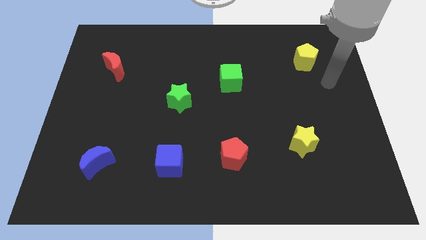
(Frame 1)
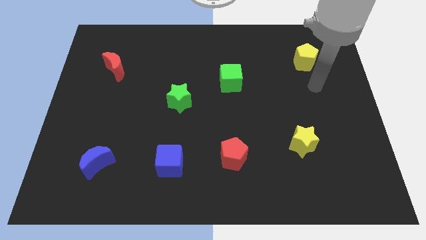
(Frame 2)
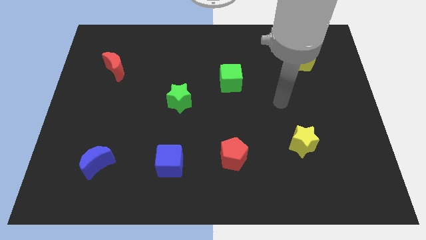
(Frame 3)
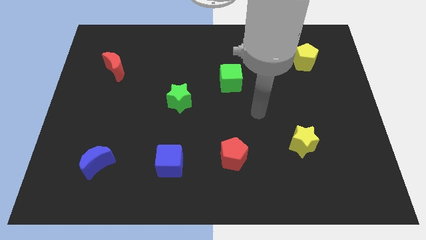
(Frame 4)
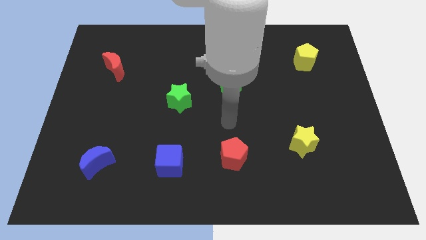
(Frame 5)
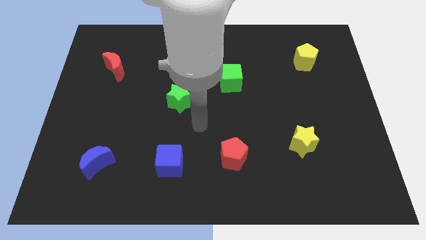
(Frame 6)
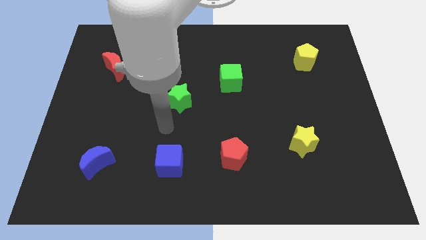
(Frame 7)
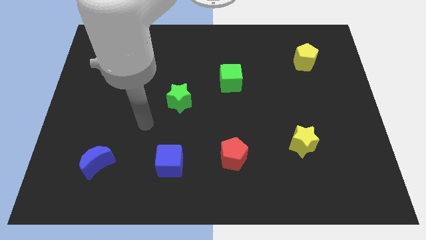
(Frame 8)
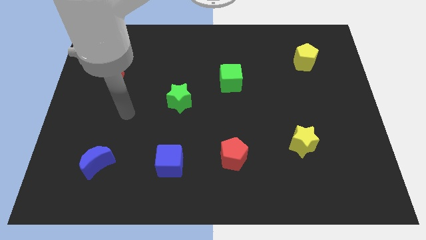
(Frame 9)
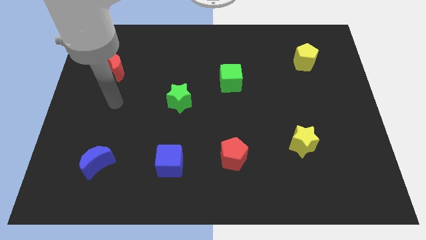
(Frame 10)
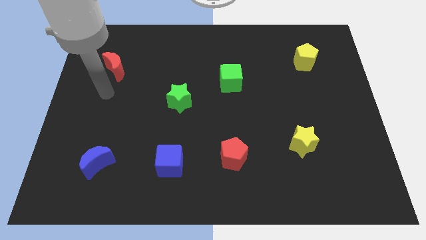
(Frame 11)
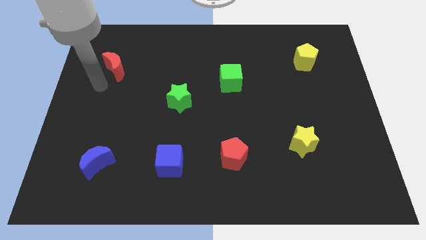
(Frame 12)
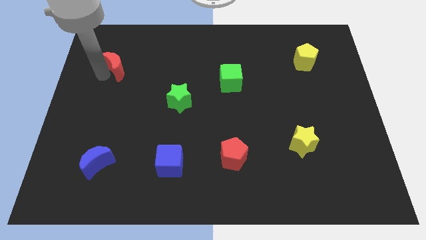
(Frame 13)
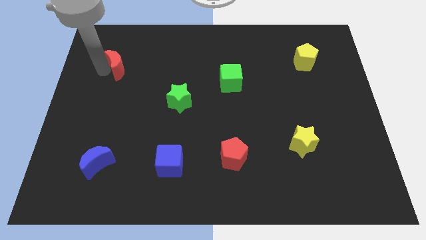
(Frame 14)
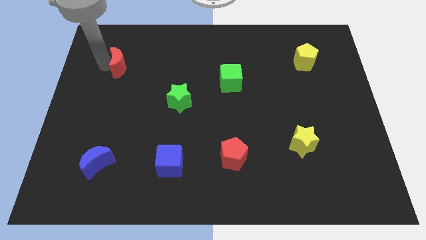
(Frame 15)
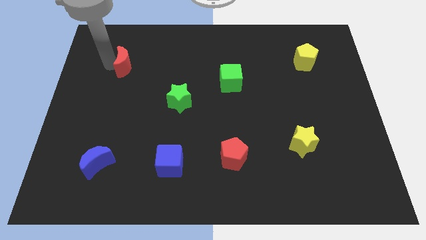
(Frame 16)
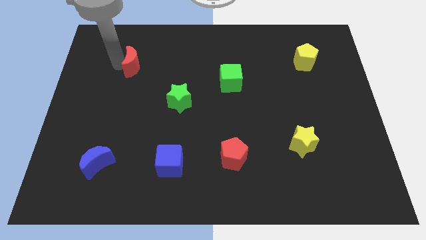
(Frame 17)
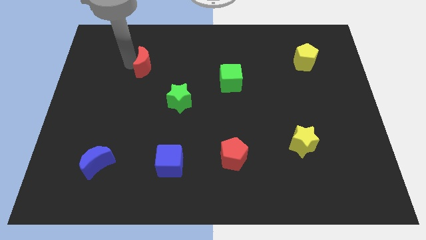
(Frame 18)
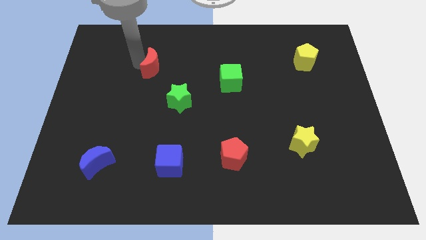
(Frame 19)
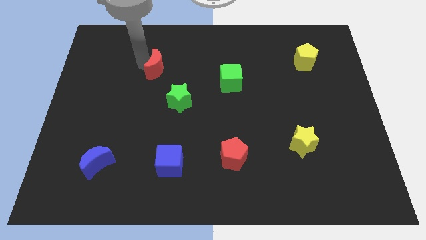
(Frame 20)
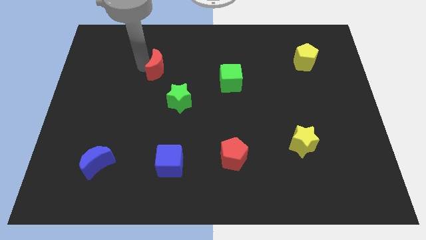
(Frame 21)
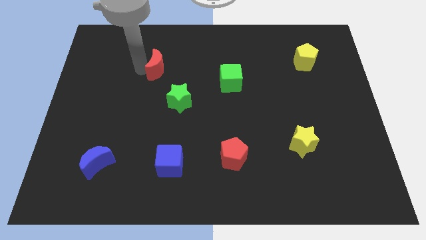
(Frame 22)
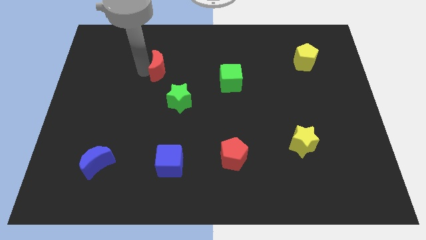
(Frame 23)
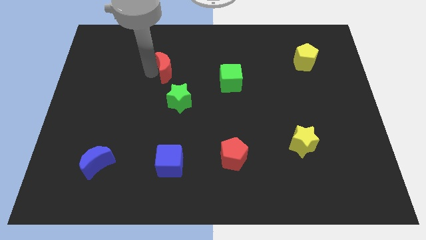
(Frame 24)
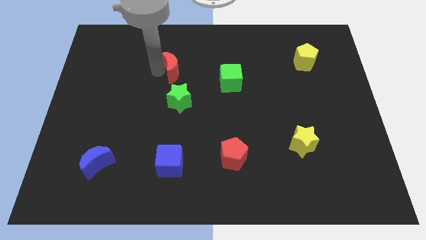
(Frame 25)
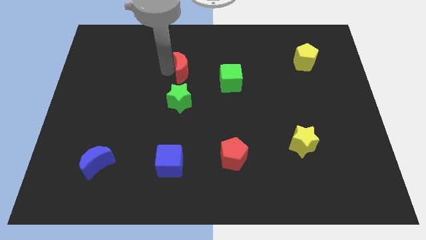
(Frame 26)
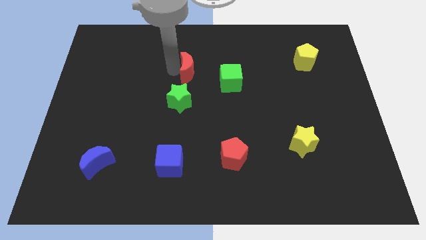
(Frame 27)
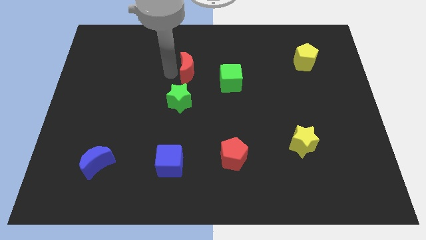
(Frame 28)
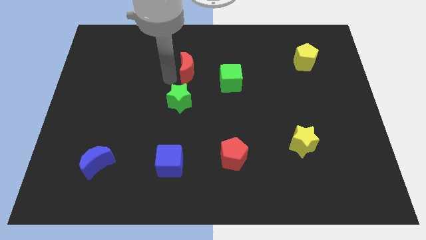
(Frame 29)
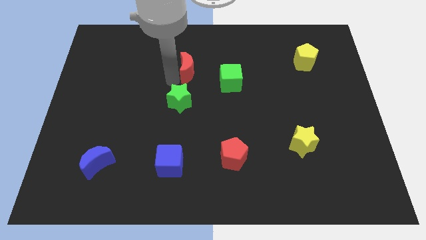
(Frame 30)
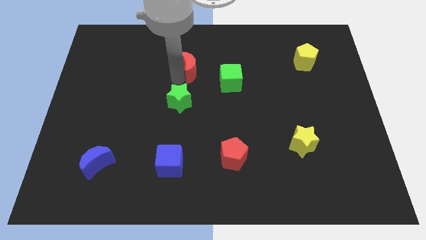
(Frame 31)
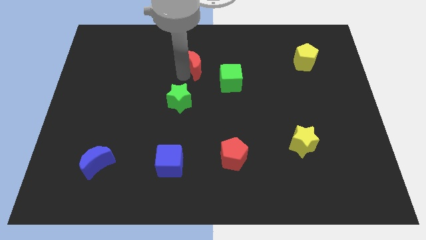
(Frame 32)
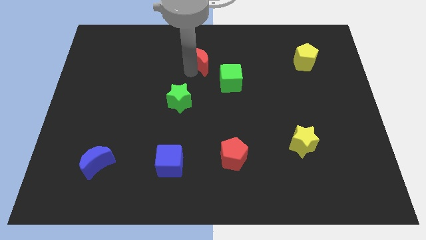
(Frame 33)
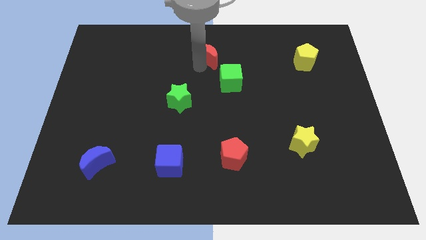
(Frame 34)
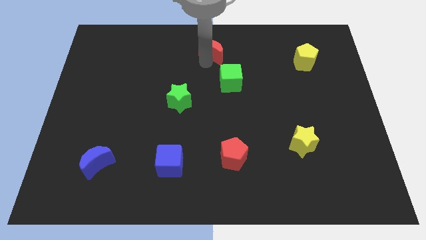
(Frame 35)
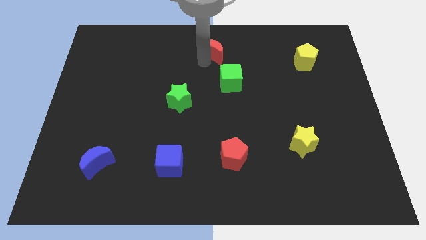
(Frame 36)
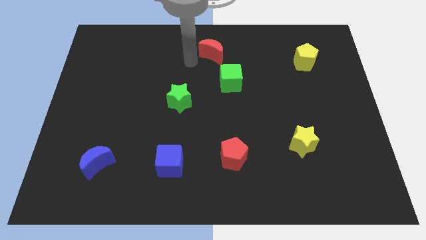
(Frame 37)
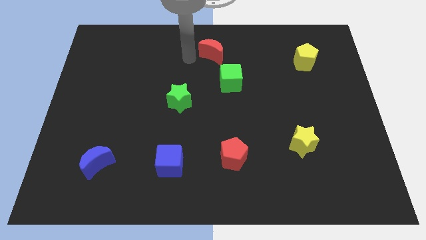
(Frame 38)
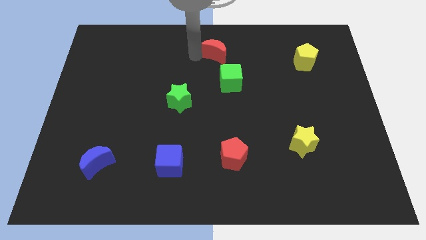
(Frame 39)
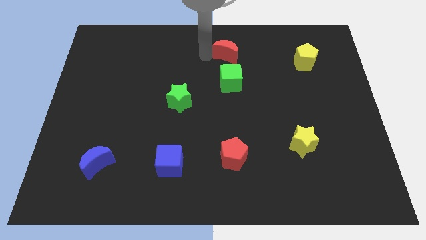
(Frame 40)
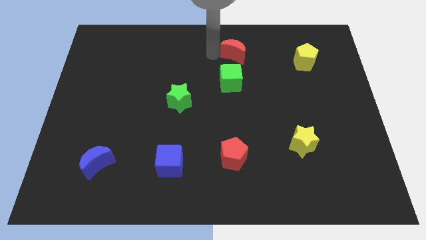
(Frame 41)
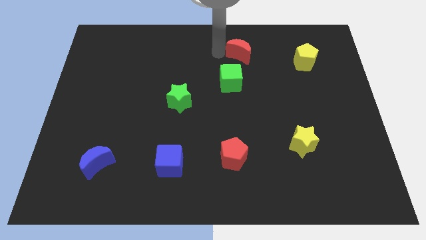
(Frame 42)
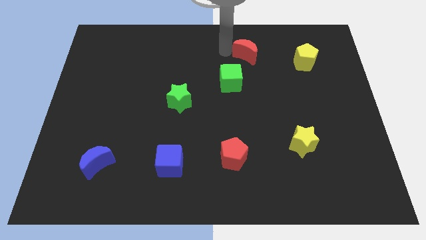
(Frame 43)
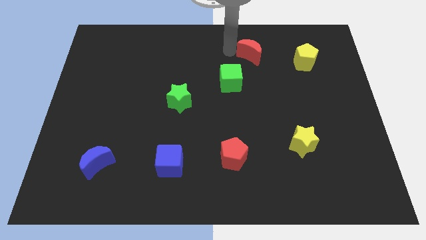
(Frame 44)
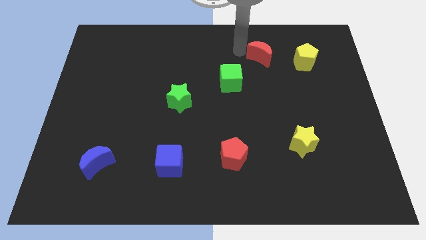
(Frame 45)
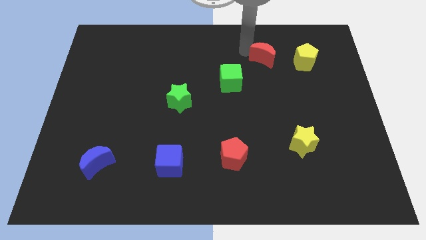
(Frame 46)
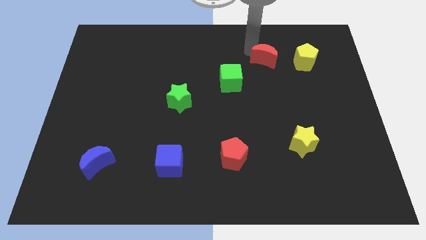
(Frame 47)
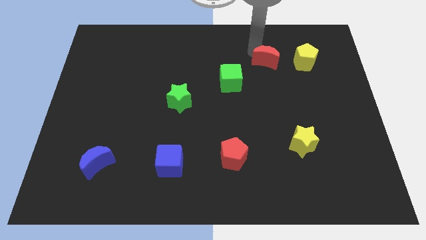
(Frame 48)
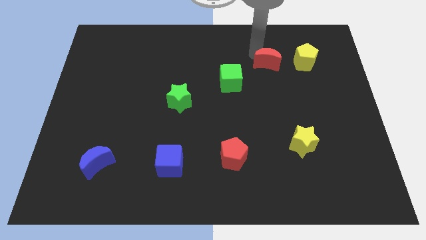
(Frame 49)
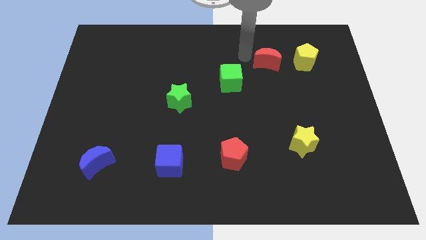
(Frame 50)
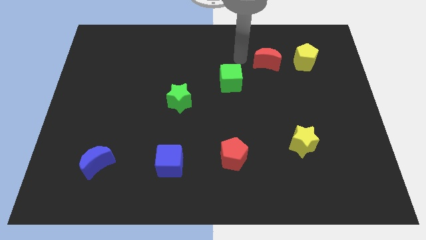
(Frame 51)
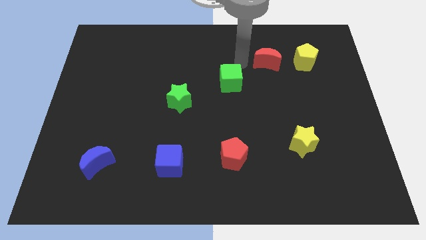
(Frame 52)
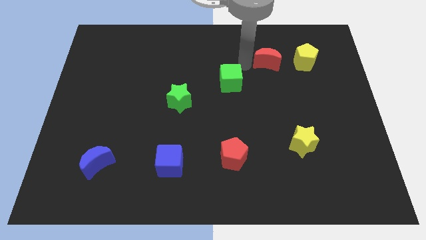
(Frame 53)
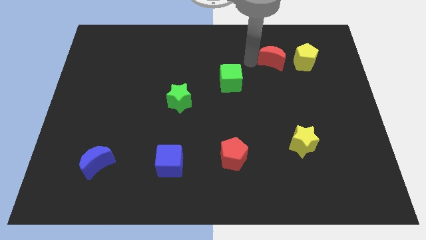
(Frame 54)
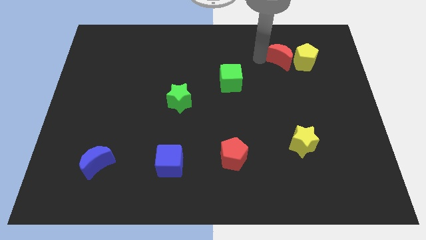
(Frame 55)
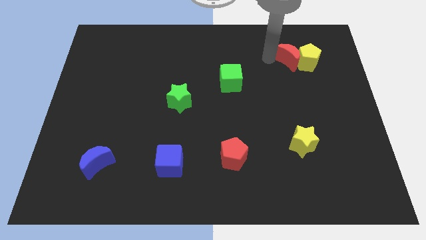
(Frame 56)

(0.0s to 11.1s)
push the red moon close to the yellow pentagon

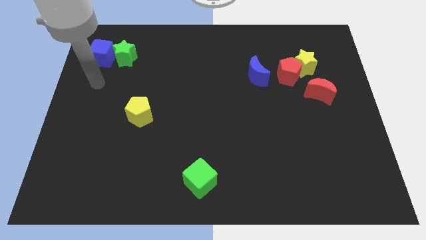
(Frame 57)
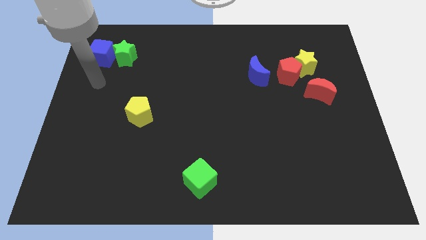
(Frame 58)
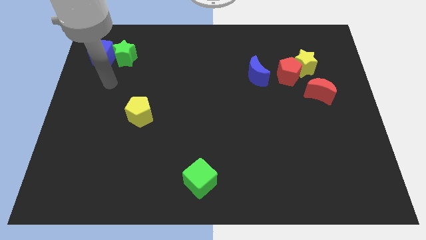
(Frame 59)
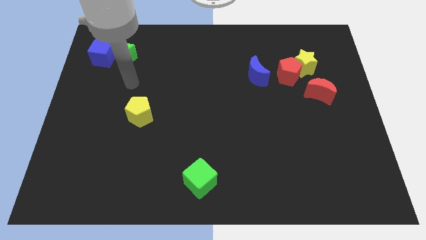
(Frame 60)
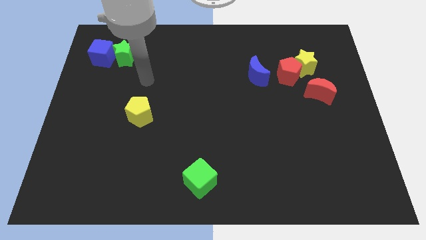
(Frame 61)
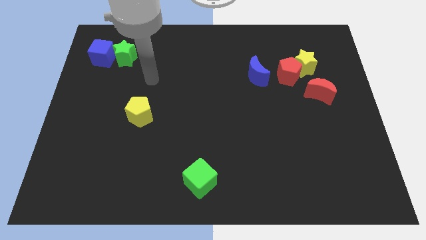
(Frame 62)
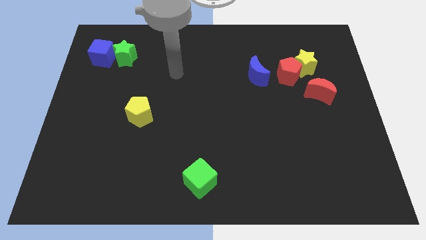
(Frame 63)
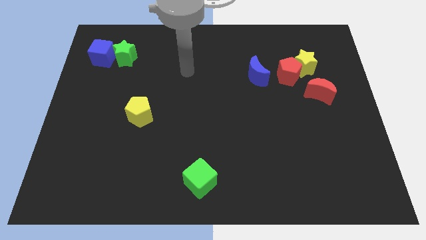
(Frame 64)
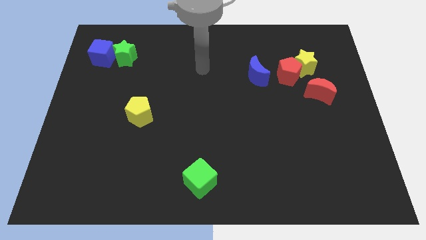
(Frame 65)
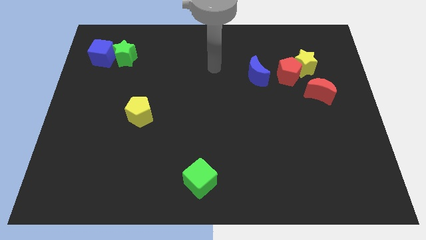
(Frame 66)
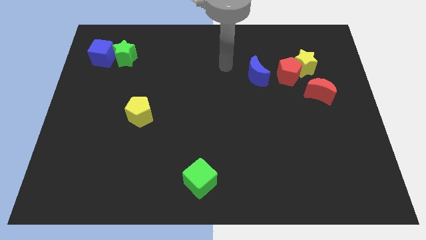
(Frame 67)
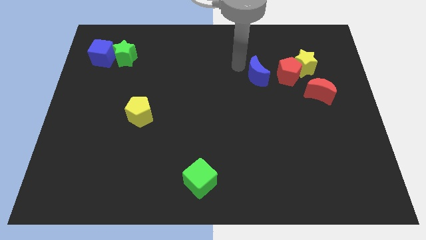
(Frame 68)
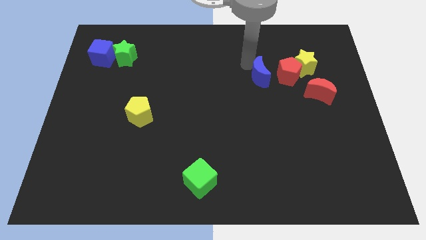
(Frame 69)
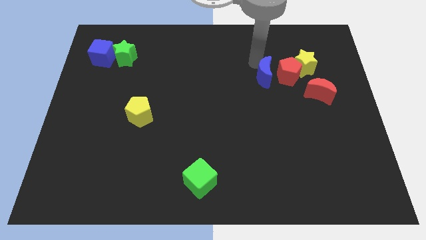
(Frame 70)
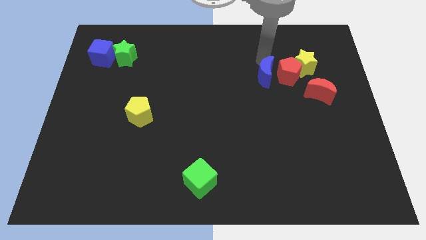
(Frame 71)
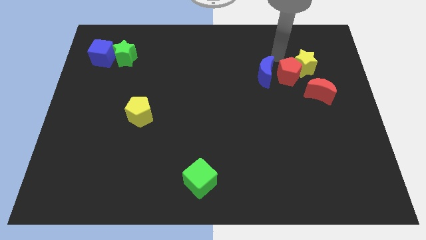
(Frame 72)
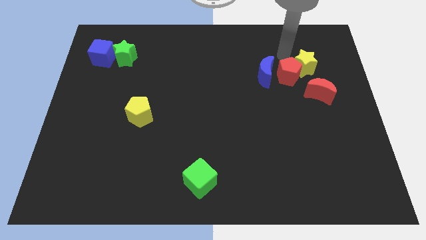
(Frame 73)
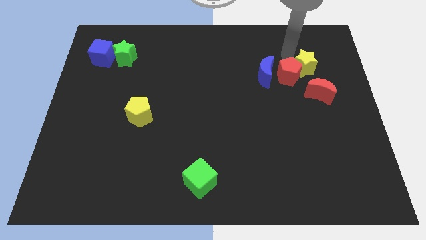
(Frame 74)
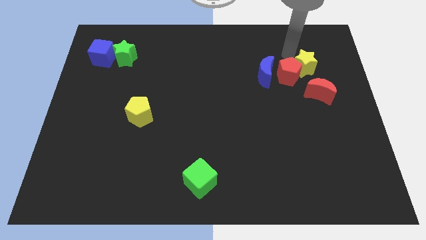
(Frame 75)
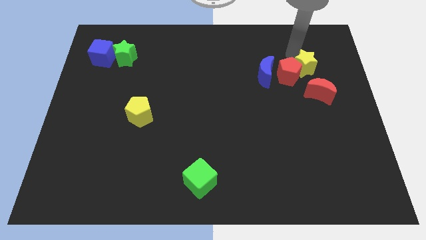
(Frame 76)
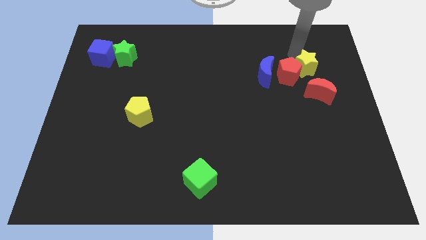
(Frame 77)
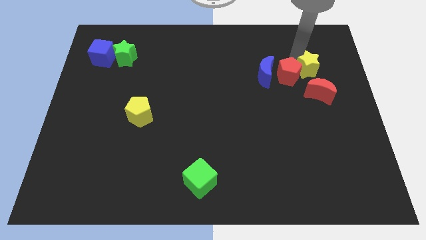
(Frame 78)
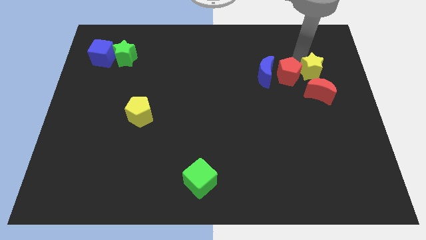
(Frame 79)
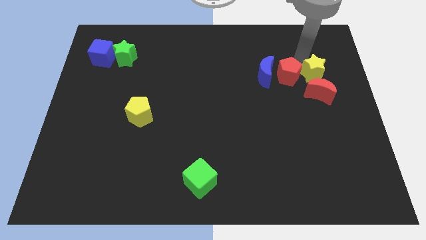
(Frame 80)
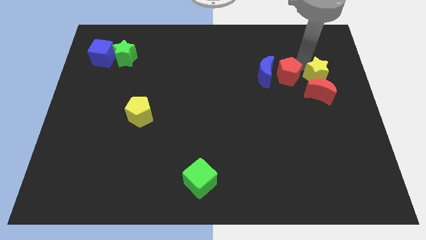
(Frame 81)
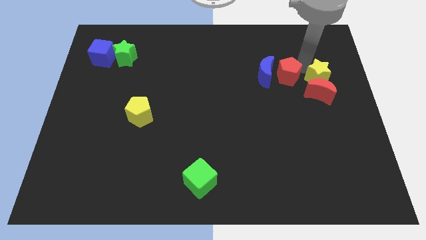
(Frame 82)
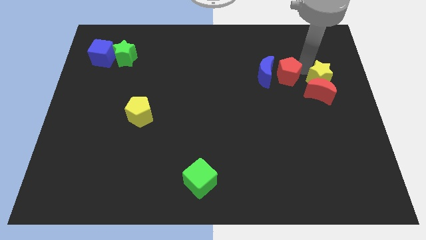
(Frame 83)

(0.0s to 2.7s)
move the yellow star towards the red moon

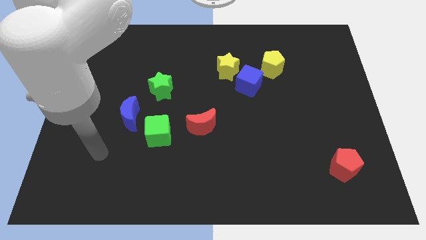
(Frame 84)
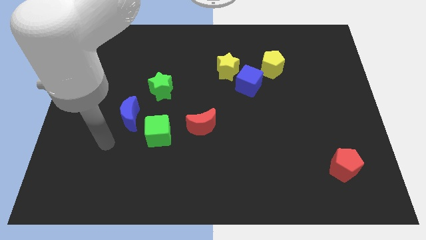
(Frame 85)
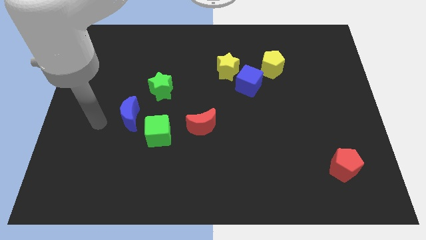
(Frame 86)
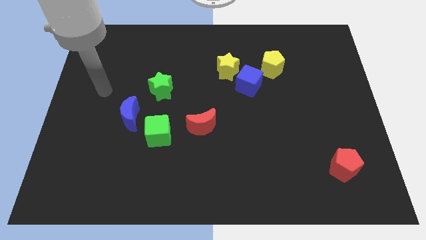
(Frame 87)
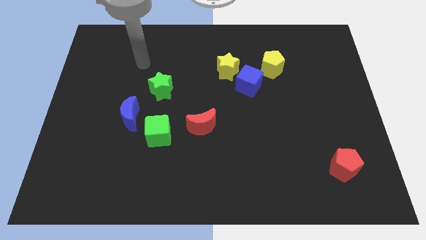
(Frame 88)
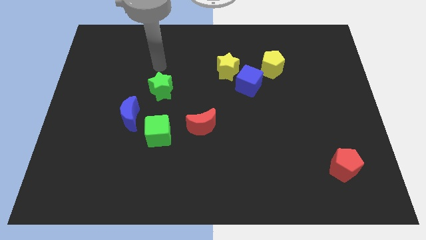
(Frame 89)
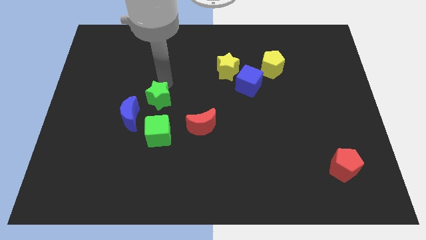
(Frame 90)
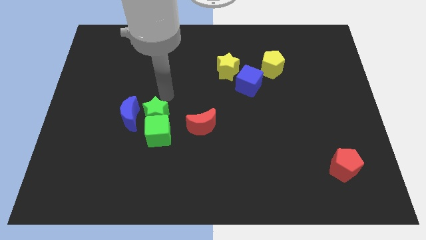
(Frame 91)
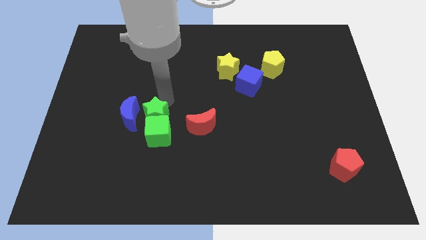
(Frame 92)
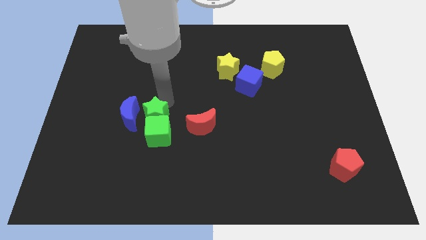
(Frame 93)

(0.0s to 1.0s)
push the green star next to the green cube
